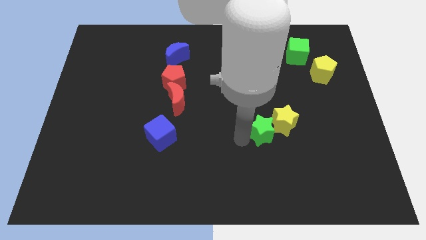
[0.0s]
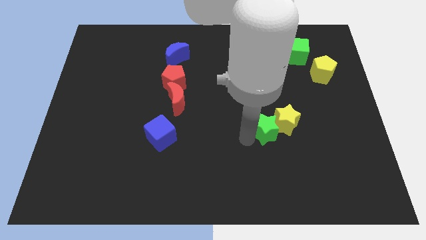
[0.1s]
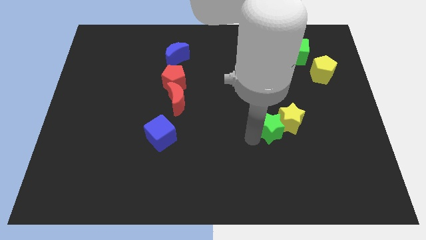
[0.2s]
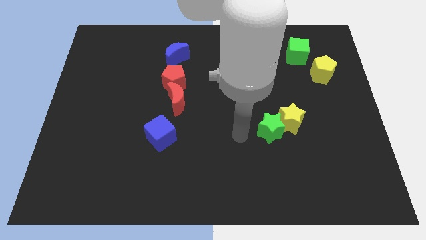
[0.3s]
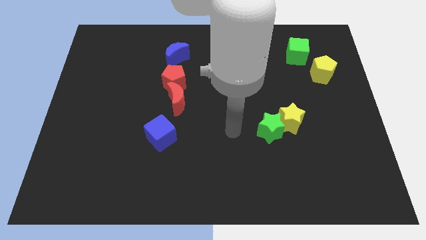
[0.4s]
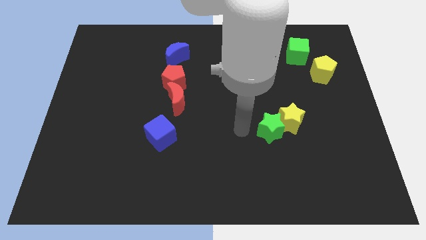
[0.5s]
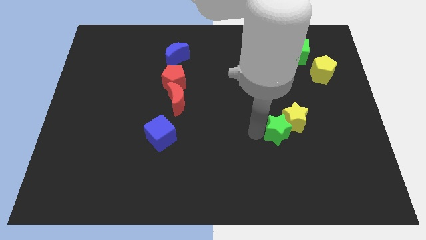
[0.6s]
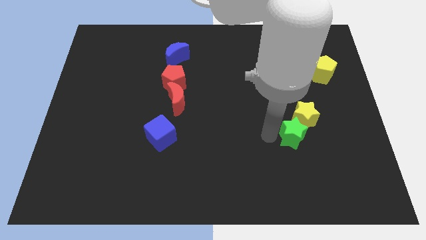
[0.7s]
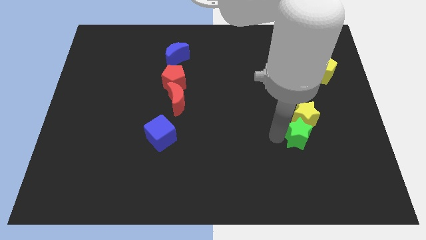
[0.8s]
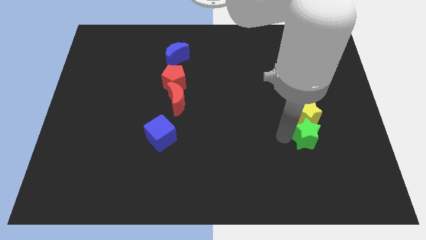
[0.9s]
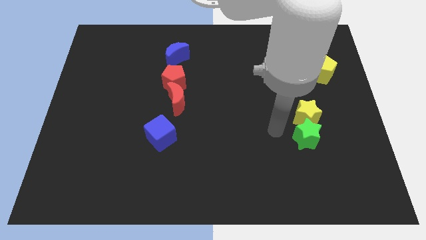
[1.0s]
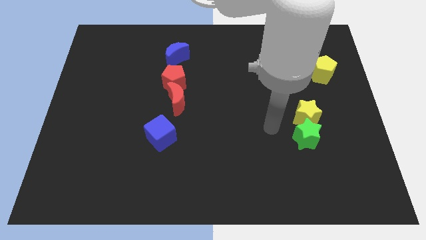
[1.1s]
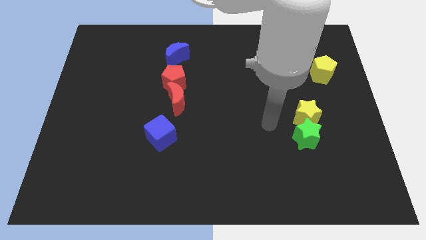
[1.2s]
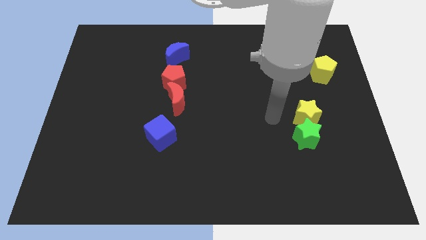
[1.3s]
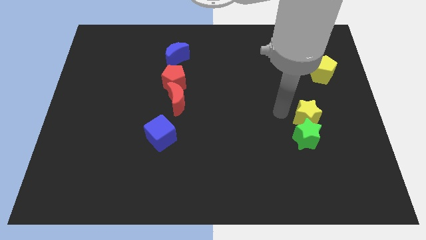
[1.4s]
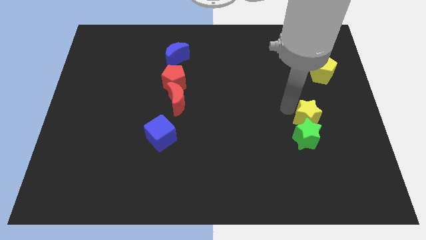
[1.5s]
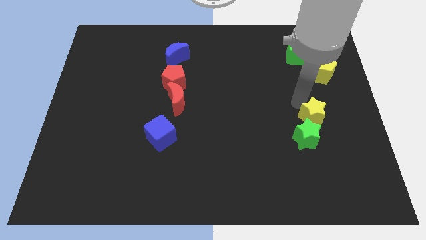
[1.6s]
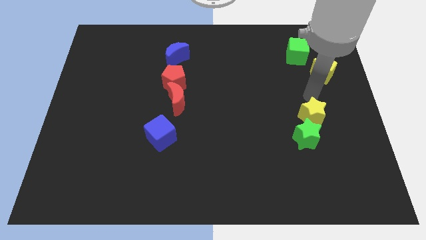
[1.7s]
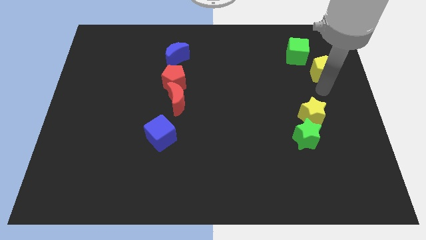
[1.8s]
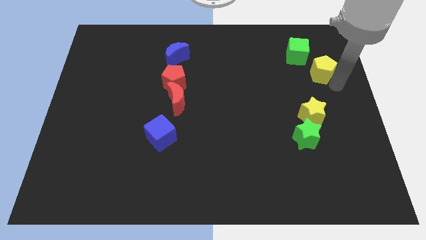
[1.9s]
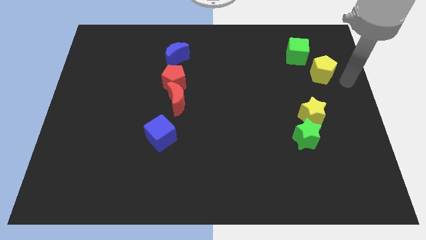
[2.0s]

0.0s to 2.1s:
move yellow star middle of the board

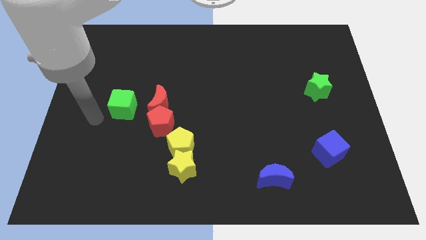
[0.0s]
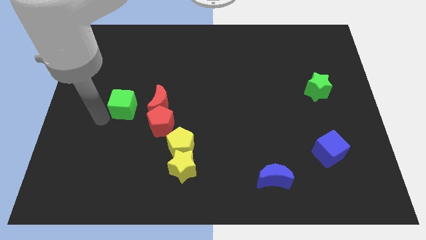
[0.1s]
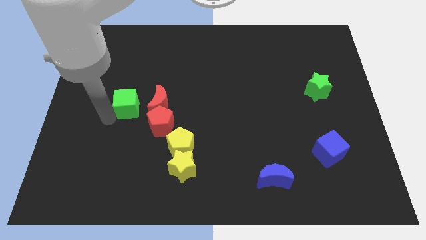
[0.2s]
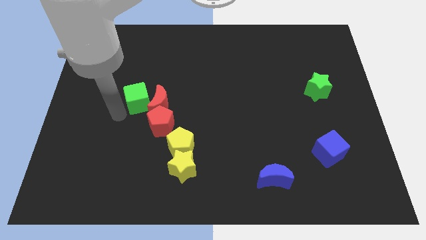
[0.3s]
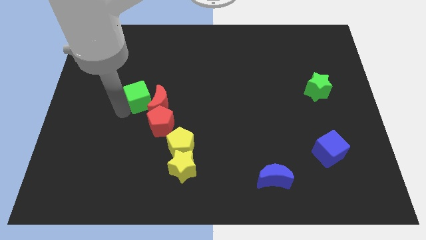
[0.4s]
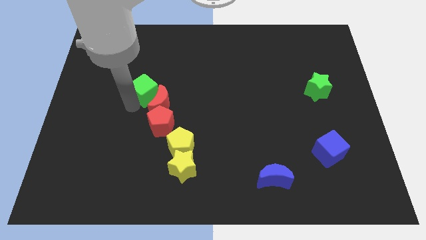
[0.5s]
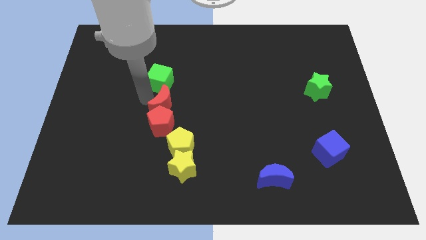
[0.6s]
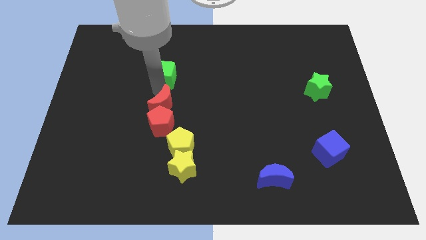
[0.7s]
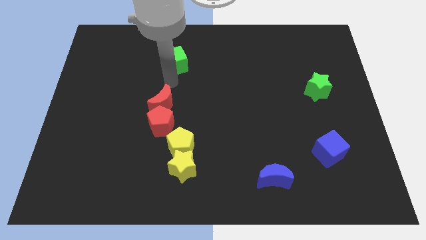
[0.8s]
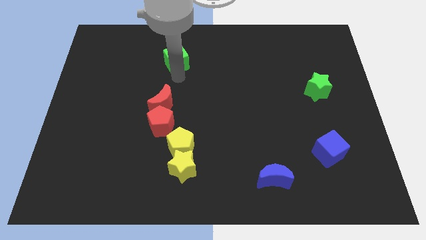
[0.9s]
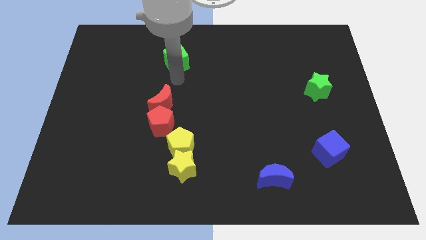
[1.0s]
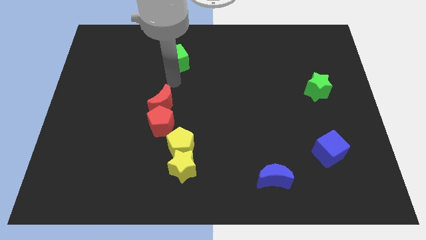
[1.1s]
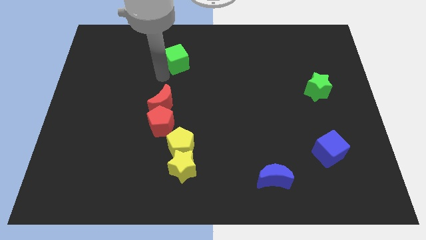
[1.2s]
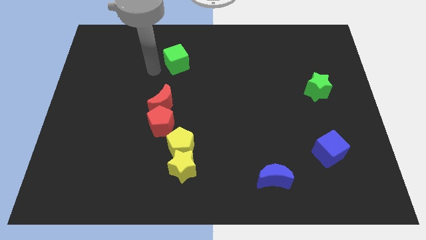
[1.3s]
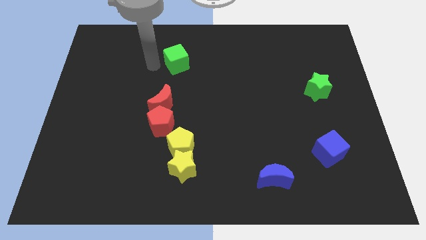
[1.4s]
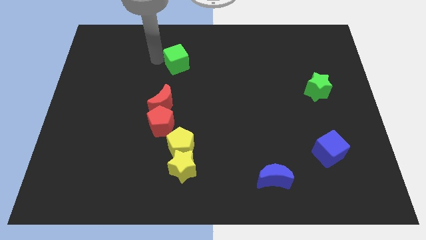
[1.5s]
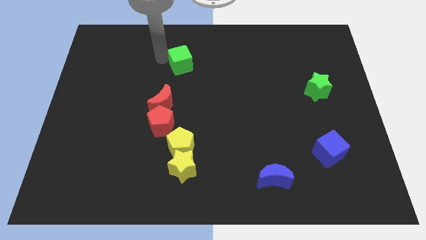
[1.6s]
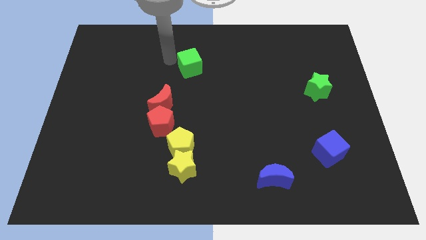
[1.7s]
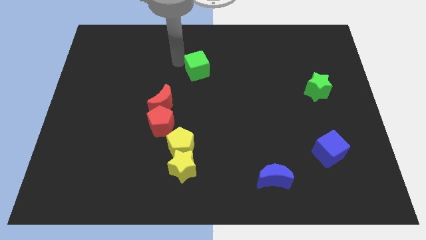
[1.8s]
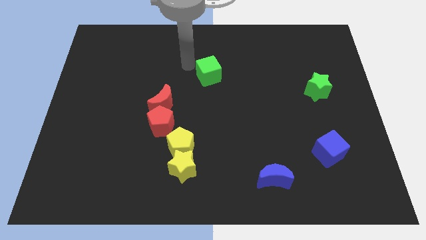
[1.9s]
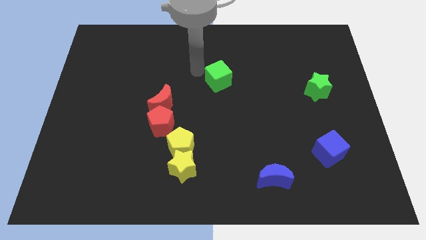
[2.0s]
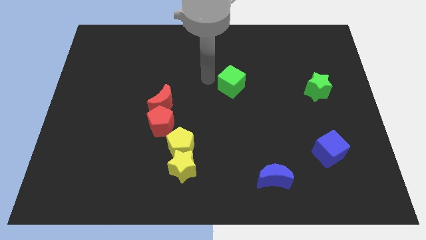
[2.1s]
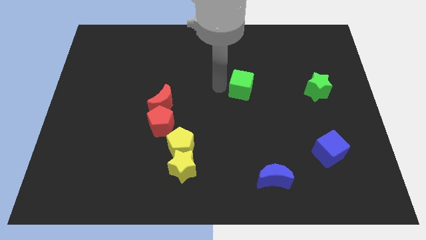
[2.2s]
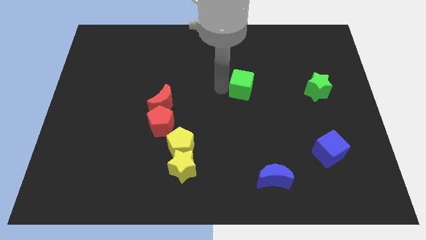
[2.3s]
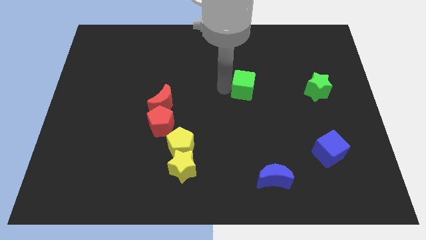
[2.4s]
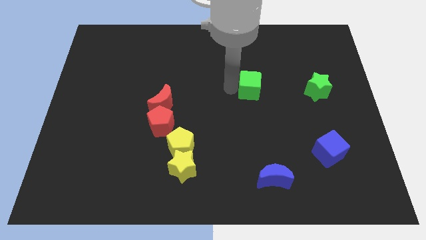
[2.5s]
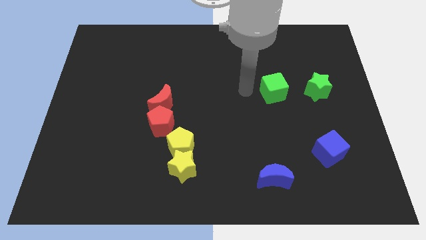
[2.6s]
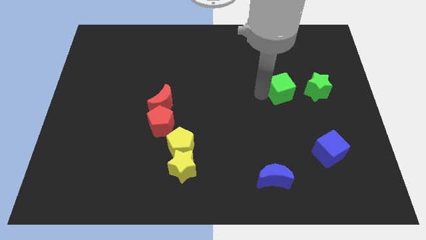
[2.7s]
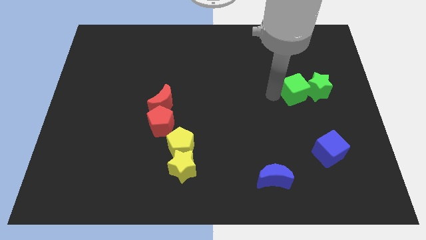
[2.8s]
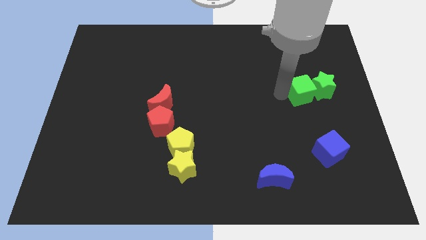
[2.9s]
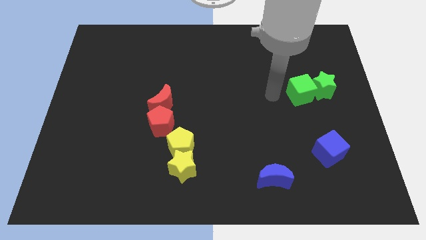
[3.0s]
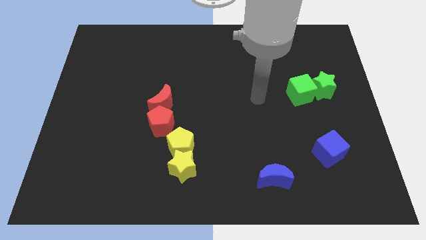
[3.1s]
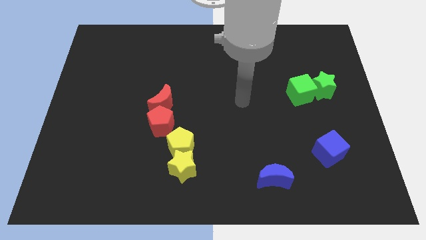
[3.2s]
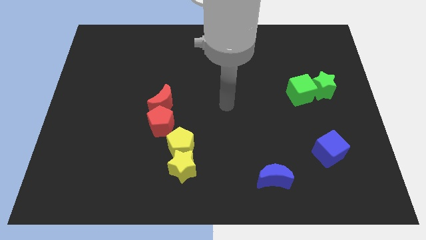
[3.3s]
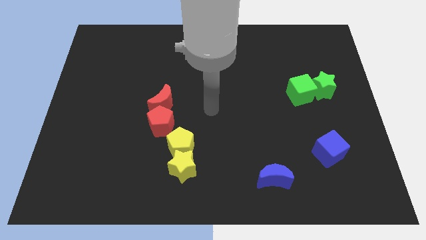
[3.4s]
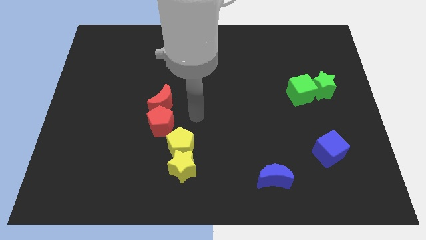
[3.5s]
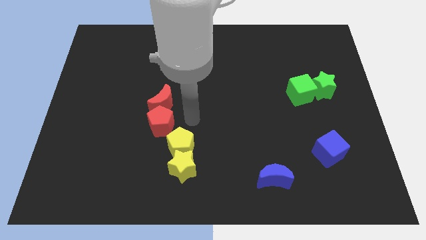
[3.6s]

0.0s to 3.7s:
move the green cube towards the left of the green star

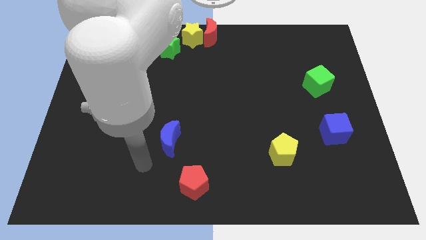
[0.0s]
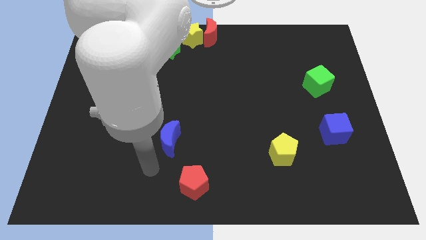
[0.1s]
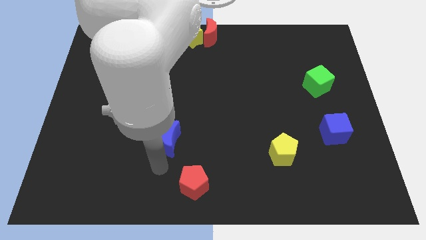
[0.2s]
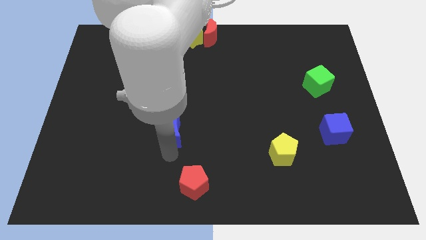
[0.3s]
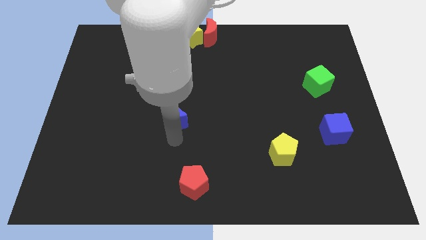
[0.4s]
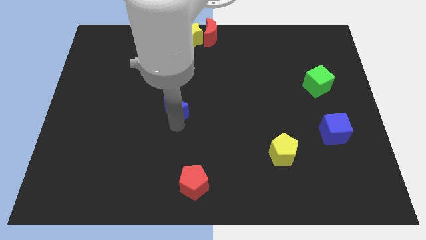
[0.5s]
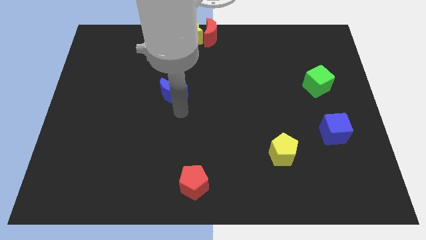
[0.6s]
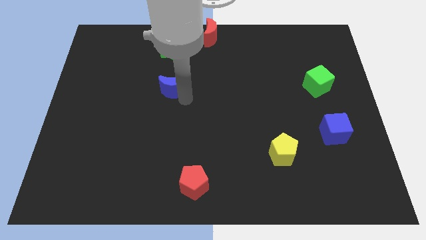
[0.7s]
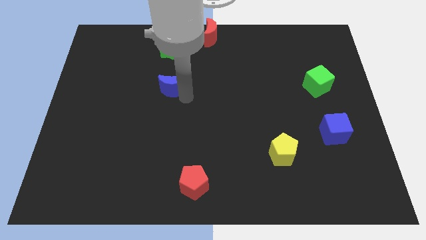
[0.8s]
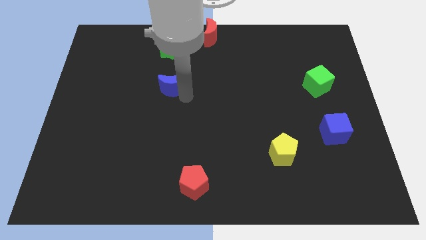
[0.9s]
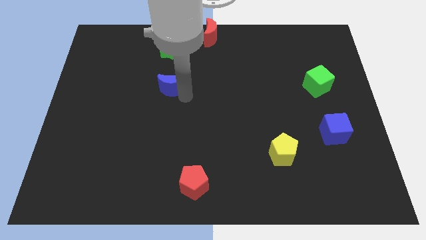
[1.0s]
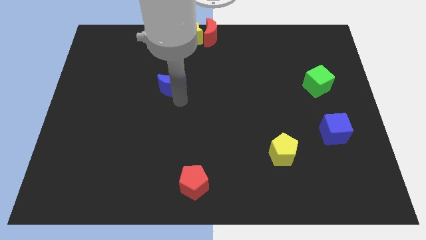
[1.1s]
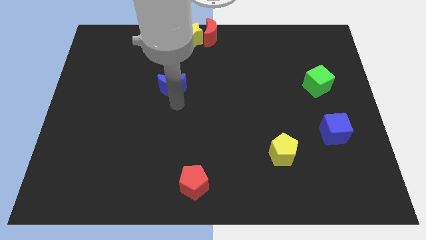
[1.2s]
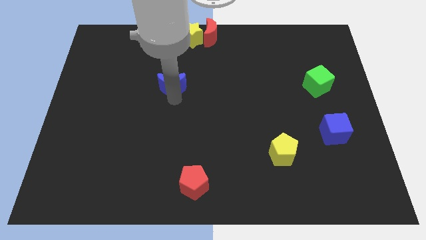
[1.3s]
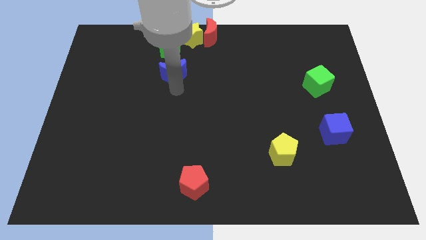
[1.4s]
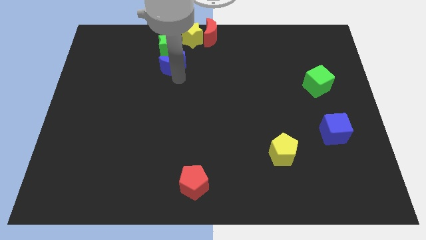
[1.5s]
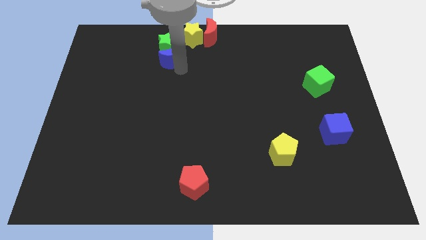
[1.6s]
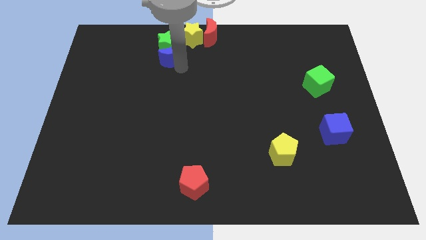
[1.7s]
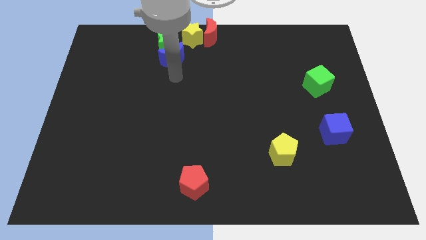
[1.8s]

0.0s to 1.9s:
push the blue crescent into the bottom side of the green star

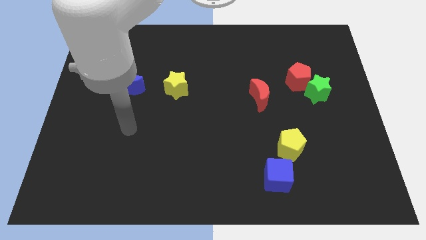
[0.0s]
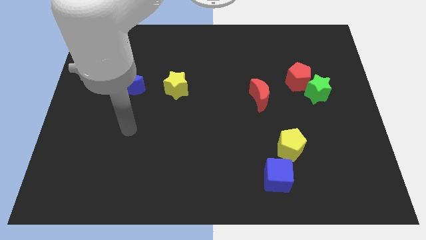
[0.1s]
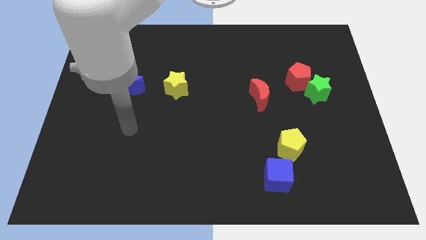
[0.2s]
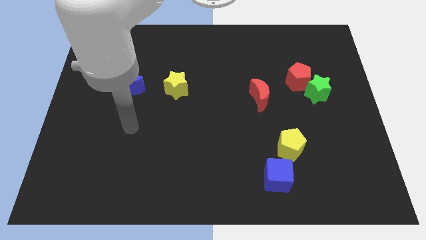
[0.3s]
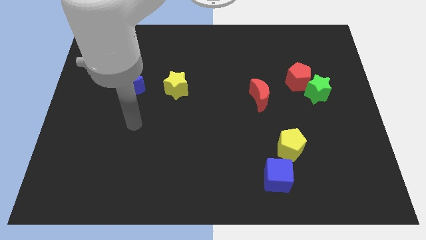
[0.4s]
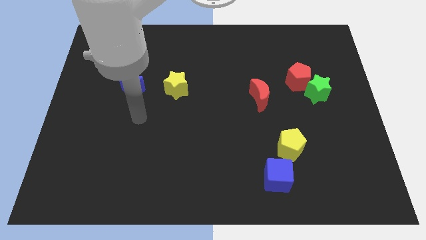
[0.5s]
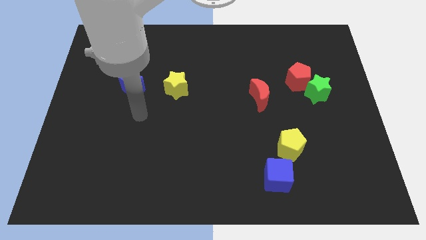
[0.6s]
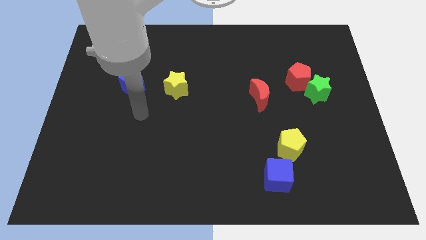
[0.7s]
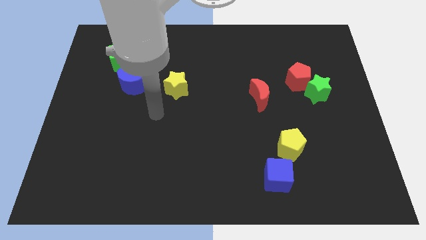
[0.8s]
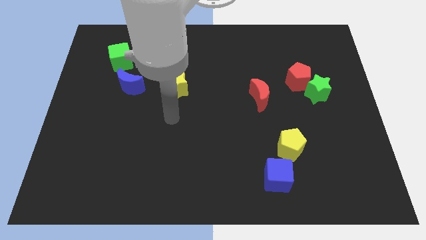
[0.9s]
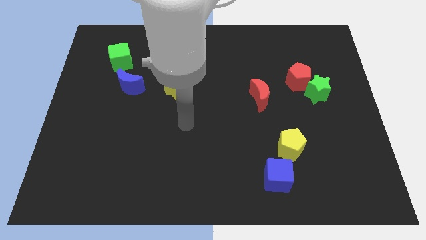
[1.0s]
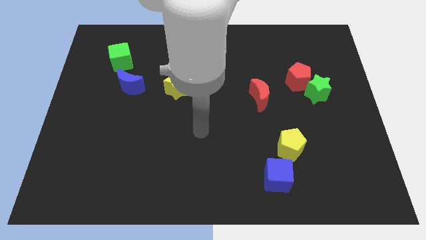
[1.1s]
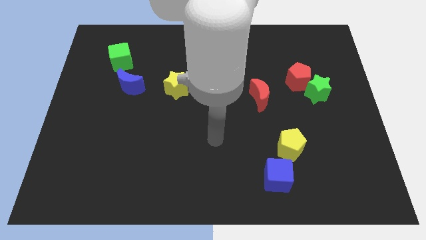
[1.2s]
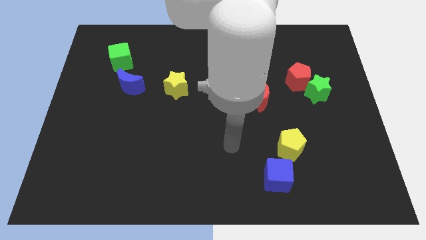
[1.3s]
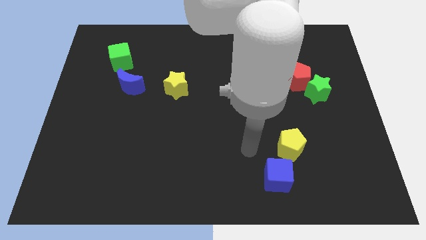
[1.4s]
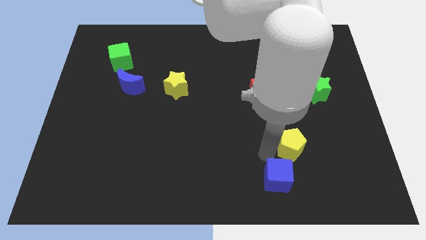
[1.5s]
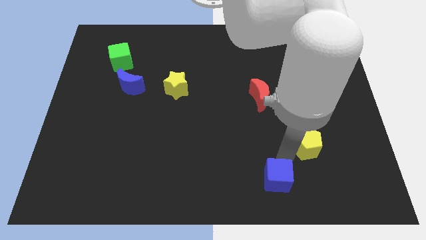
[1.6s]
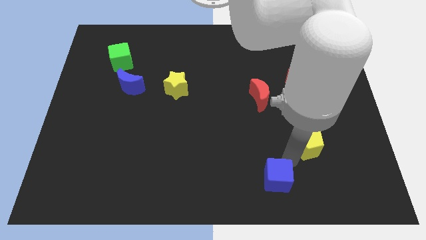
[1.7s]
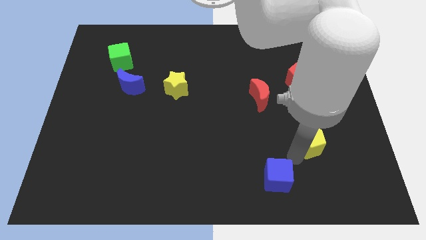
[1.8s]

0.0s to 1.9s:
push the yellow pentagon to the right slightly
